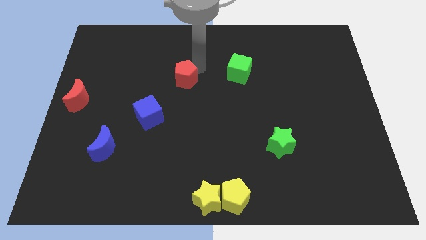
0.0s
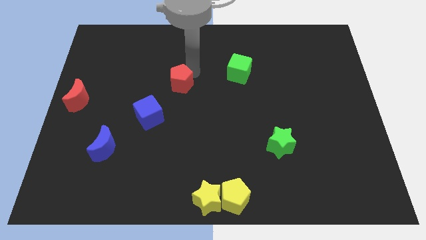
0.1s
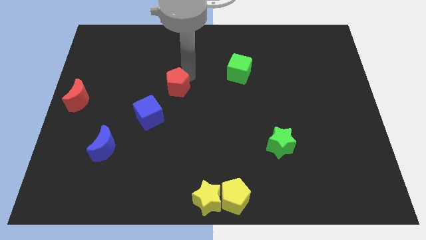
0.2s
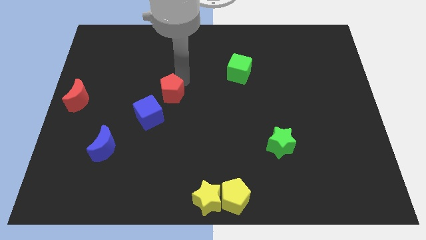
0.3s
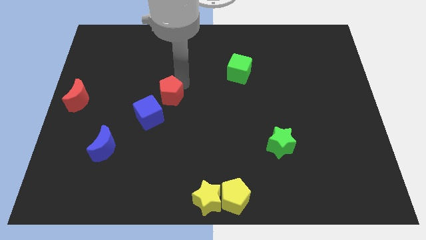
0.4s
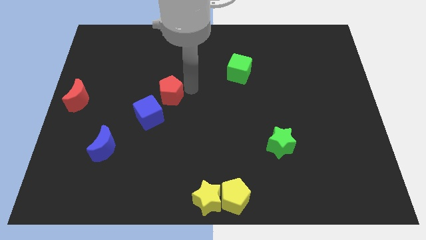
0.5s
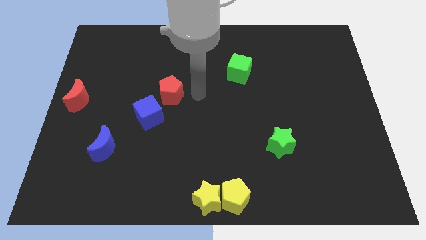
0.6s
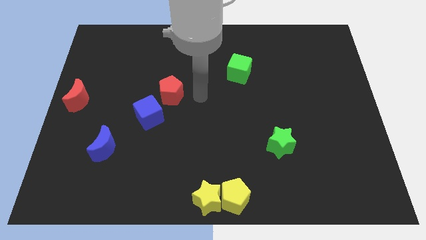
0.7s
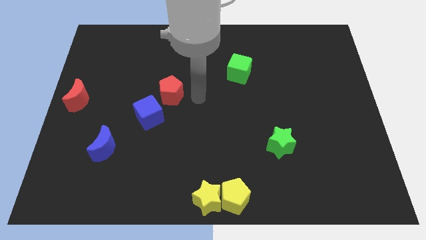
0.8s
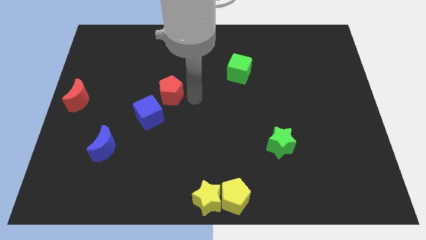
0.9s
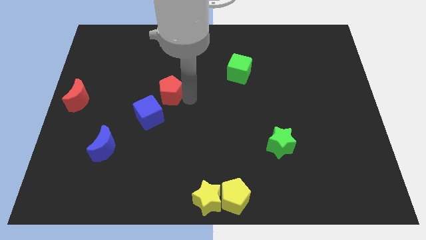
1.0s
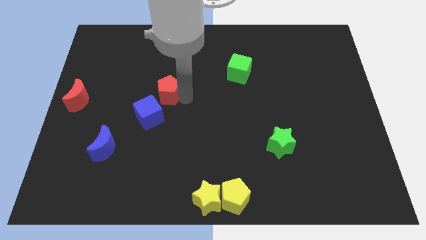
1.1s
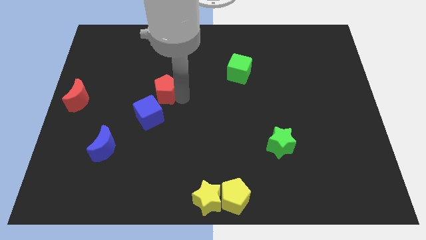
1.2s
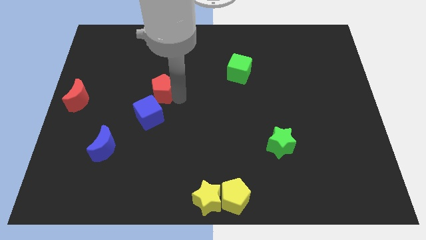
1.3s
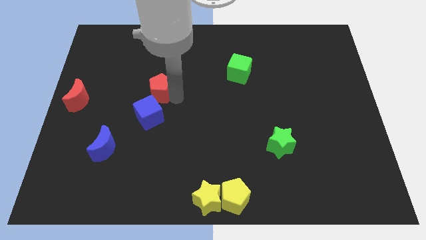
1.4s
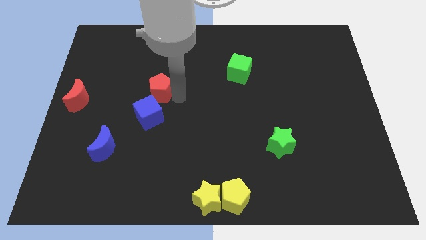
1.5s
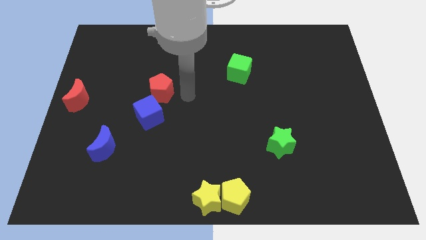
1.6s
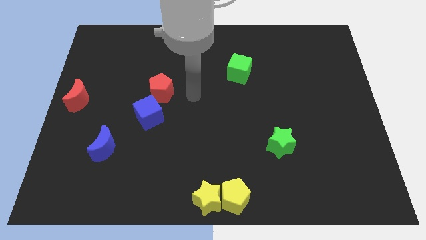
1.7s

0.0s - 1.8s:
place the red pentagon close to the blue cube

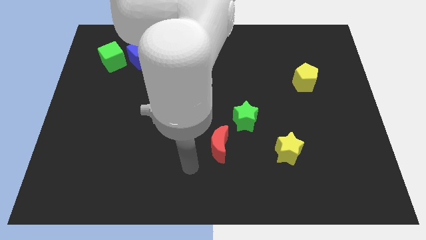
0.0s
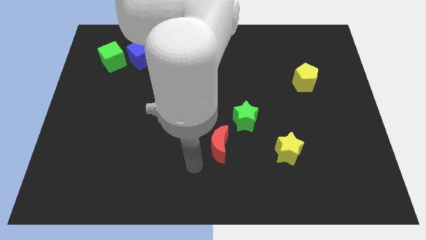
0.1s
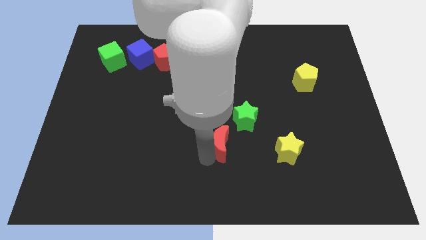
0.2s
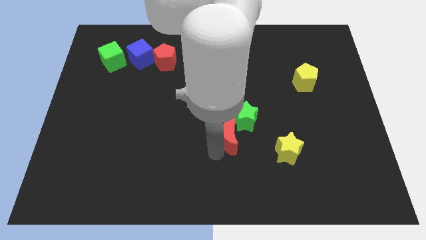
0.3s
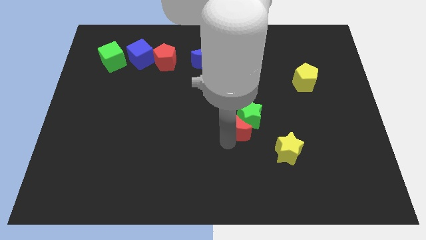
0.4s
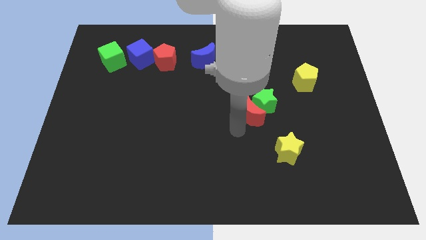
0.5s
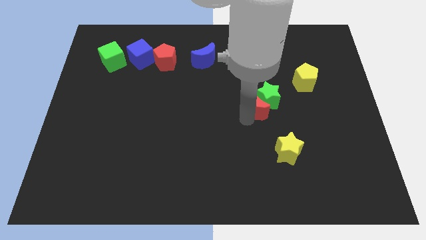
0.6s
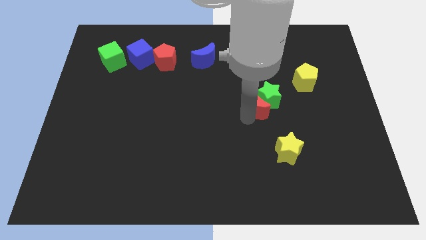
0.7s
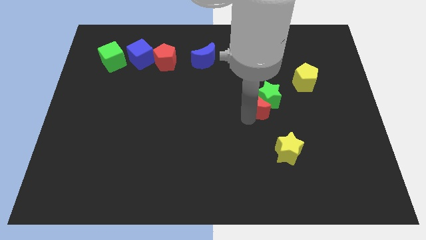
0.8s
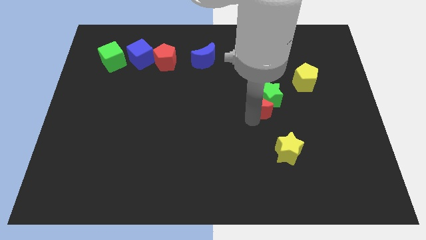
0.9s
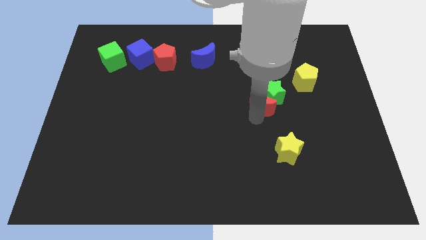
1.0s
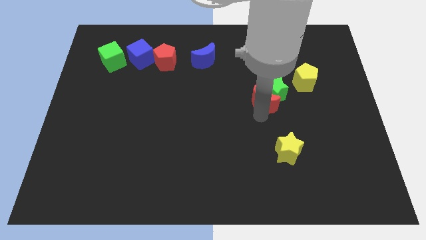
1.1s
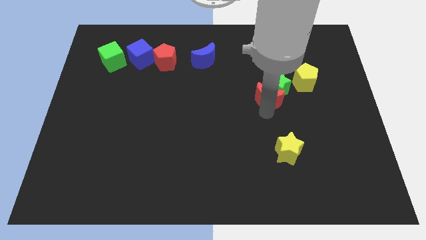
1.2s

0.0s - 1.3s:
push the red crescent and green star towards yellow pentagon

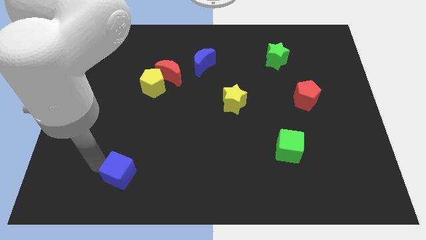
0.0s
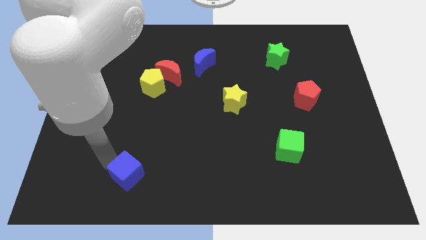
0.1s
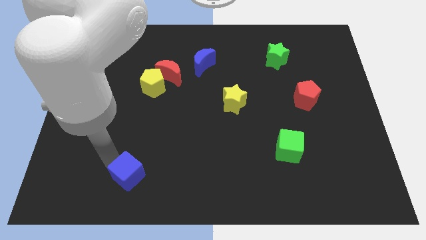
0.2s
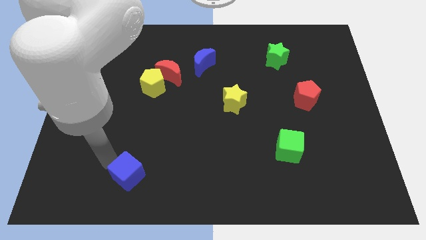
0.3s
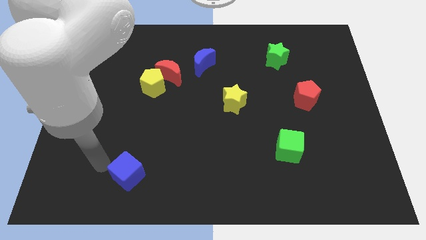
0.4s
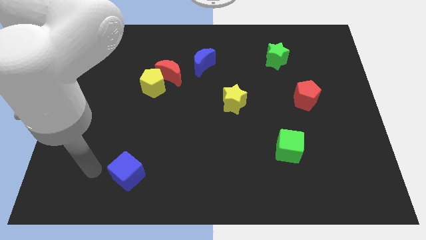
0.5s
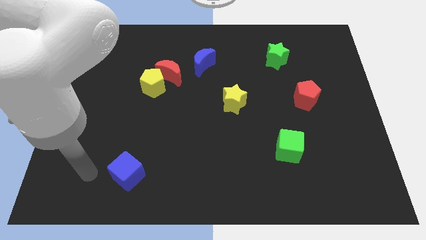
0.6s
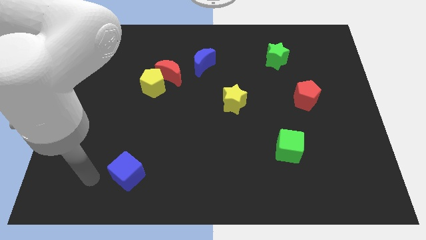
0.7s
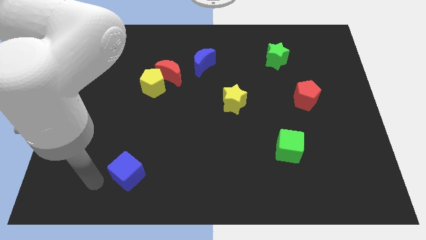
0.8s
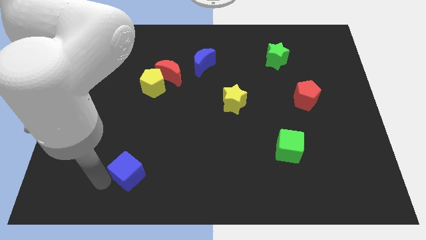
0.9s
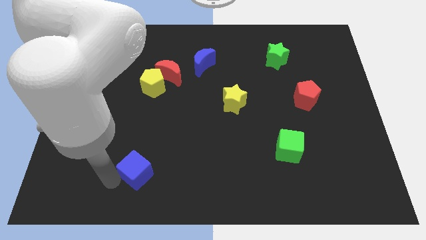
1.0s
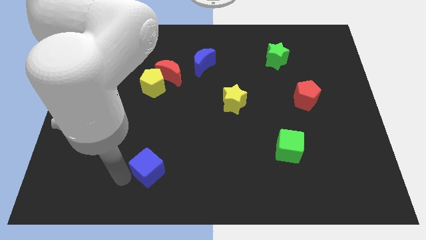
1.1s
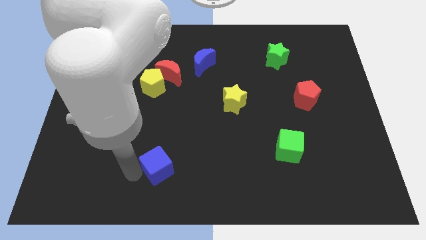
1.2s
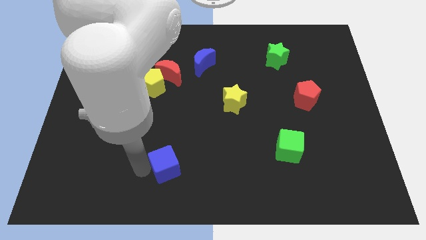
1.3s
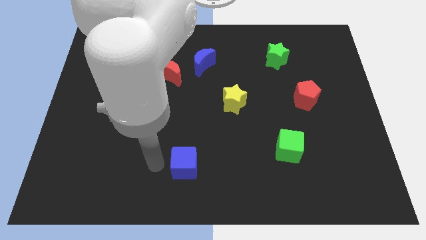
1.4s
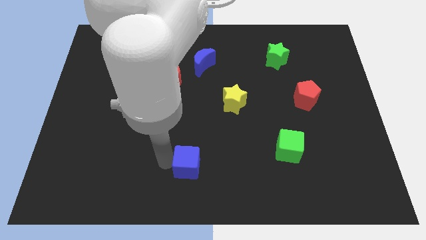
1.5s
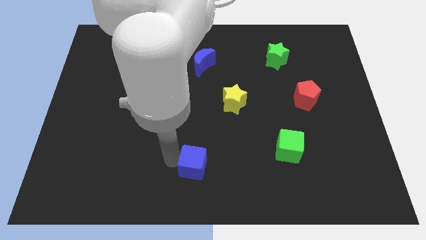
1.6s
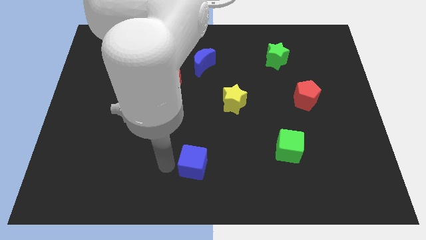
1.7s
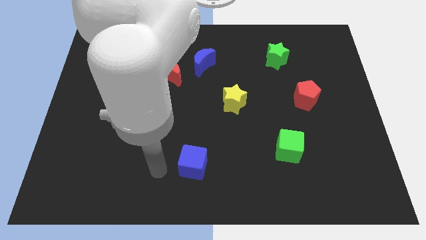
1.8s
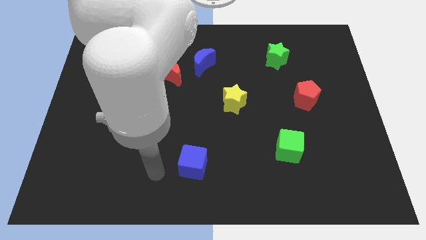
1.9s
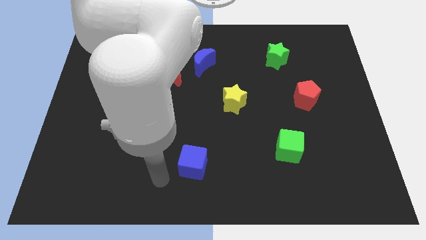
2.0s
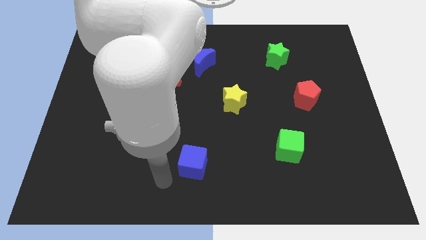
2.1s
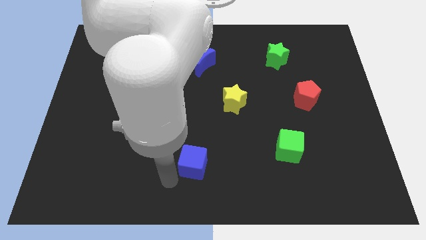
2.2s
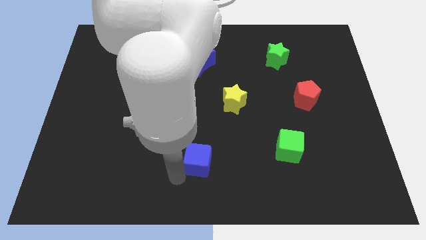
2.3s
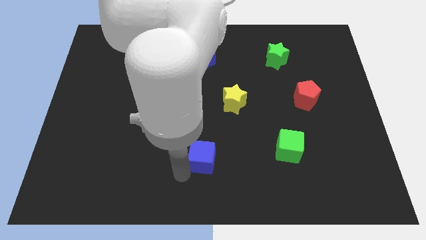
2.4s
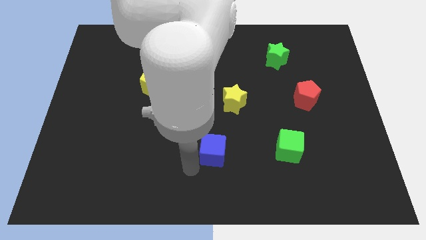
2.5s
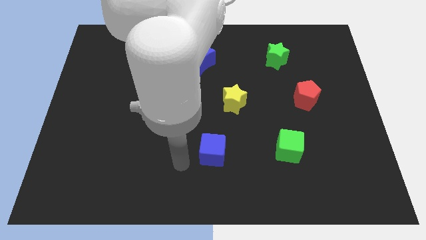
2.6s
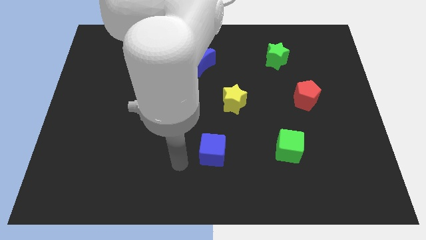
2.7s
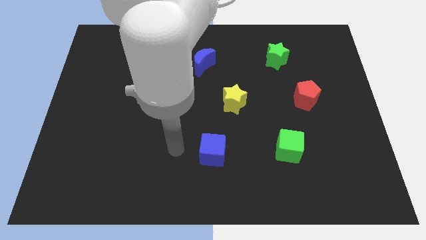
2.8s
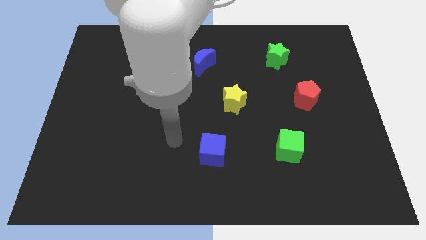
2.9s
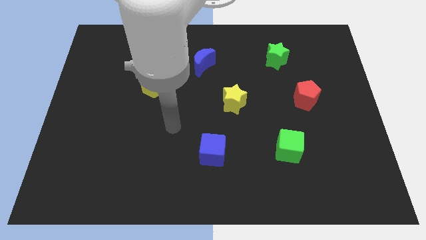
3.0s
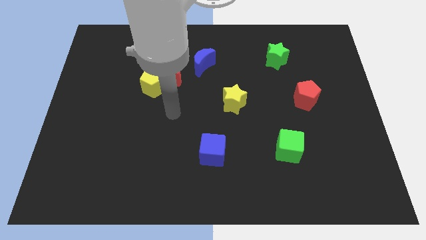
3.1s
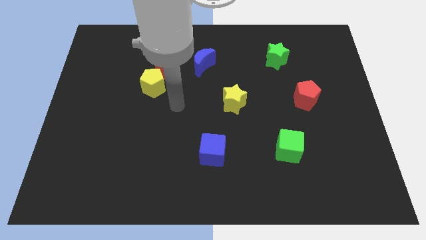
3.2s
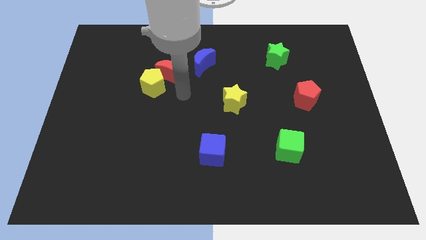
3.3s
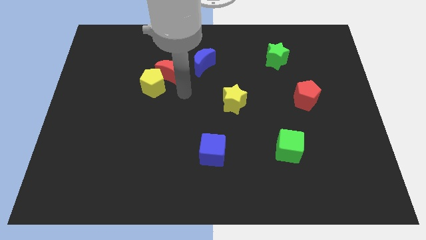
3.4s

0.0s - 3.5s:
place the blue cube to the left of the green cube

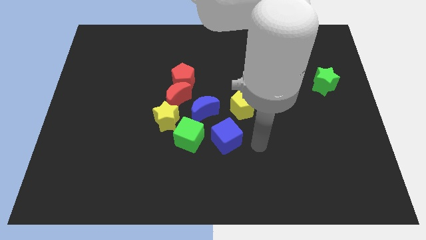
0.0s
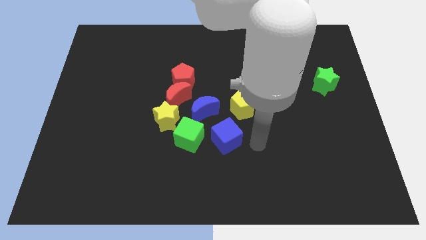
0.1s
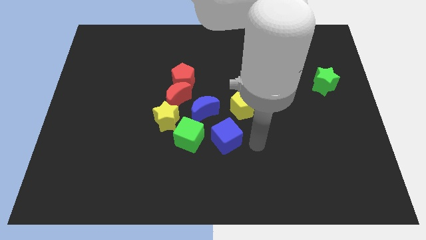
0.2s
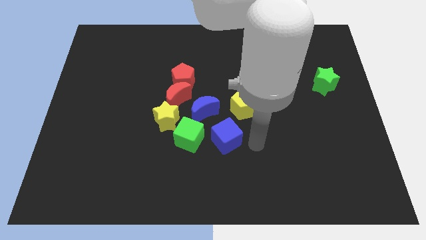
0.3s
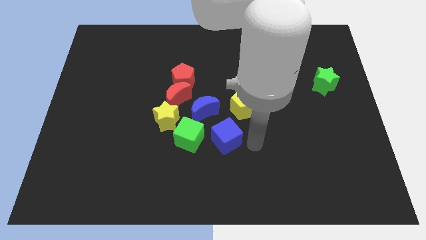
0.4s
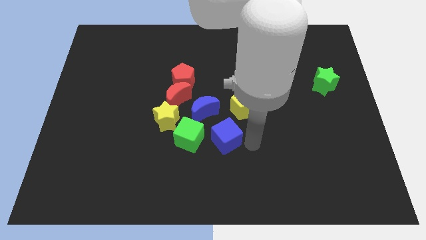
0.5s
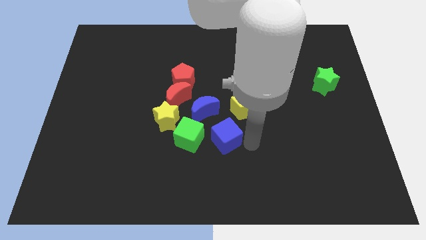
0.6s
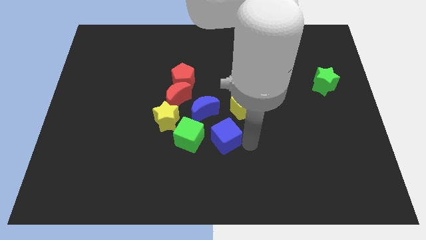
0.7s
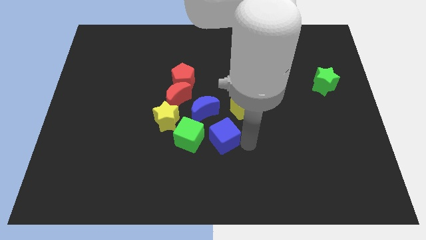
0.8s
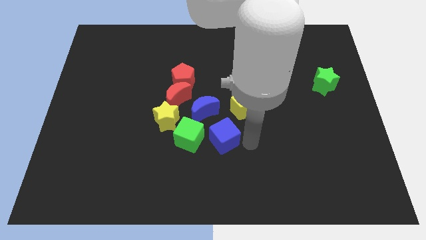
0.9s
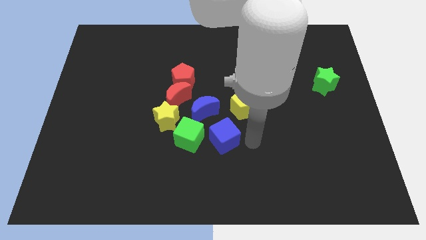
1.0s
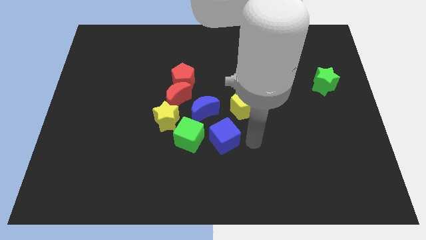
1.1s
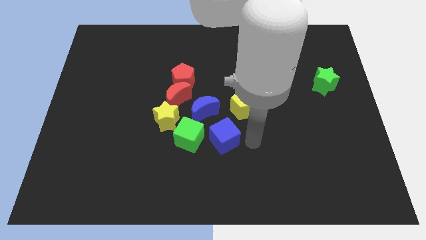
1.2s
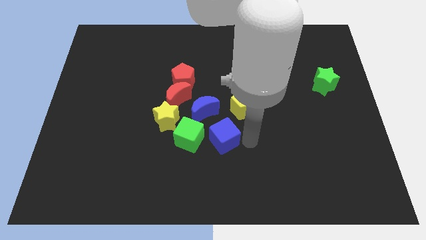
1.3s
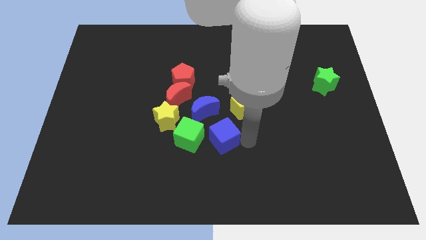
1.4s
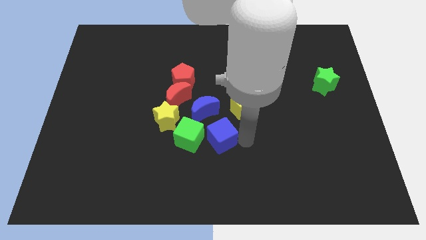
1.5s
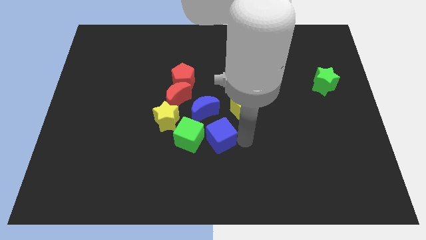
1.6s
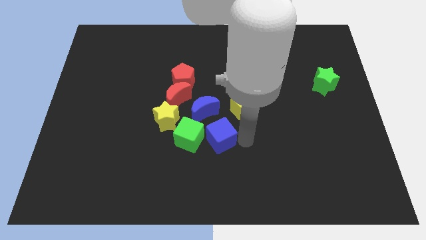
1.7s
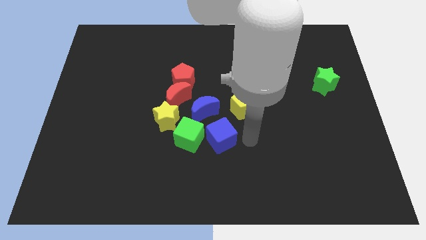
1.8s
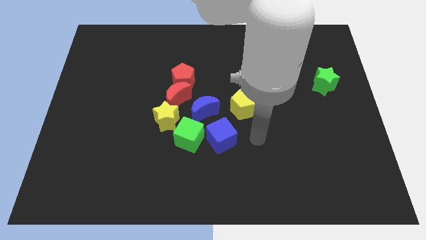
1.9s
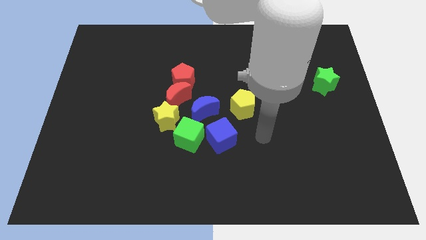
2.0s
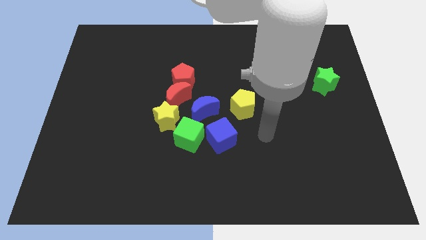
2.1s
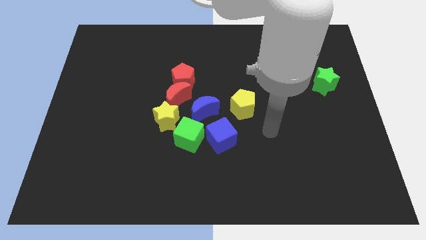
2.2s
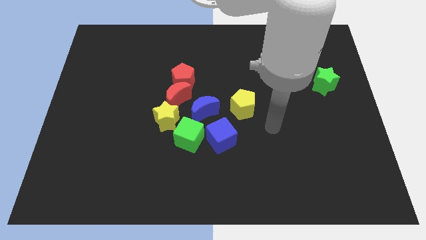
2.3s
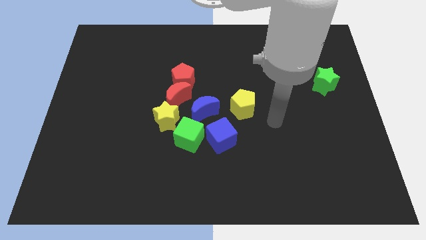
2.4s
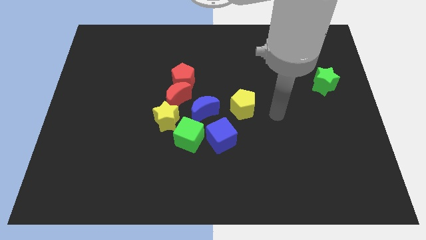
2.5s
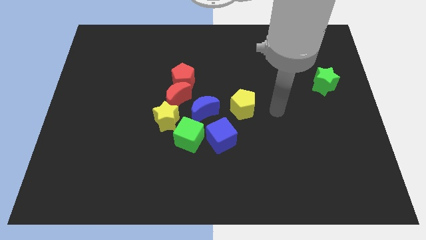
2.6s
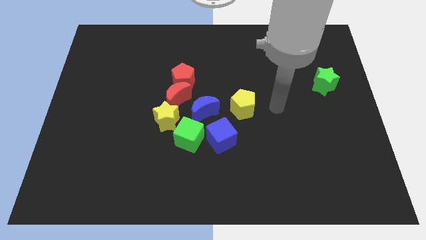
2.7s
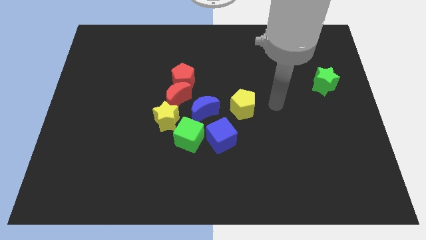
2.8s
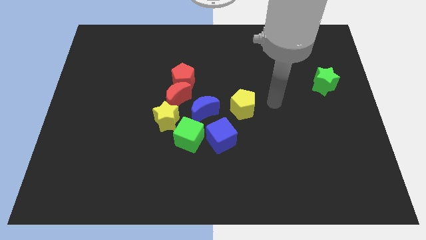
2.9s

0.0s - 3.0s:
slightly push blue cube into the green cube
